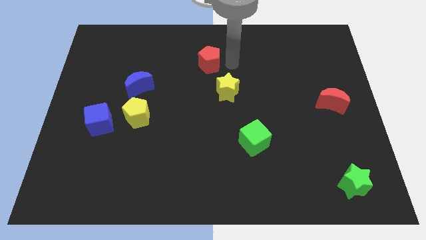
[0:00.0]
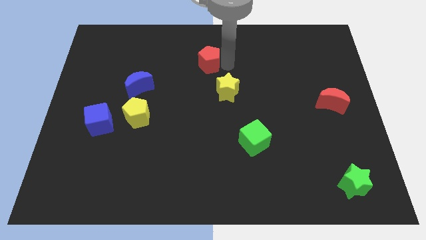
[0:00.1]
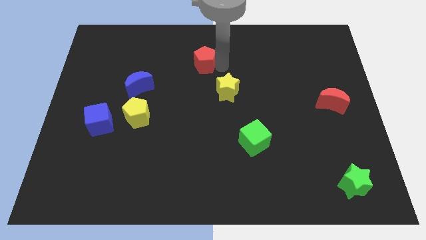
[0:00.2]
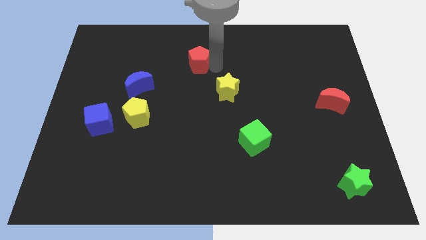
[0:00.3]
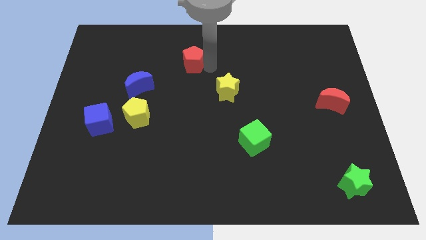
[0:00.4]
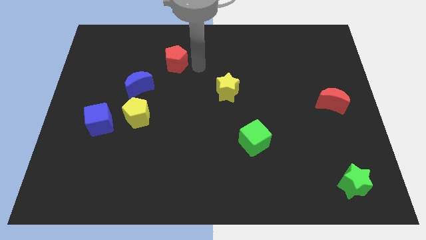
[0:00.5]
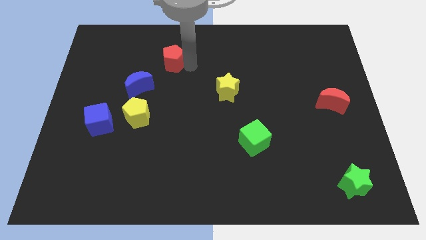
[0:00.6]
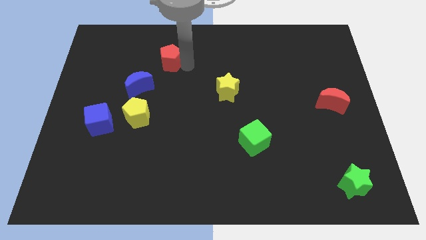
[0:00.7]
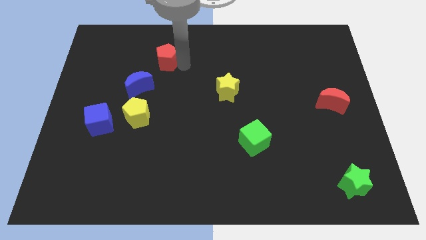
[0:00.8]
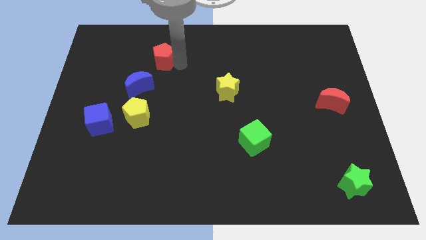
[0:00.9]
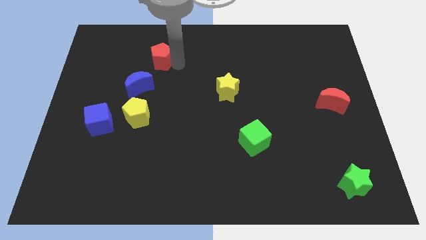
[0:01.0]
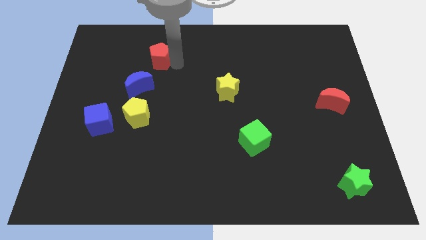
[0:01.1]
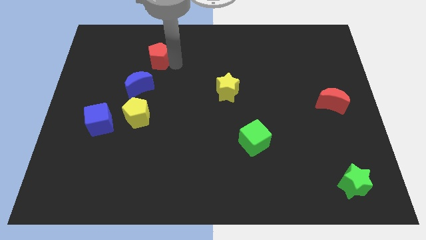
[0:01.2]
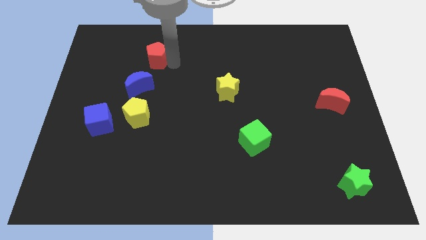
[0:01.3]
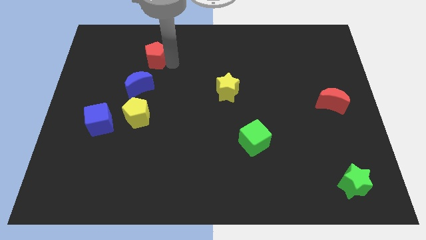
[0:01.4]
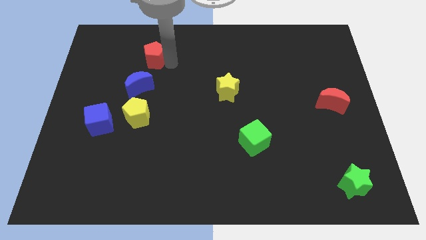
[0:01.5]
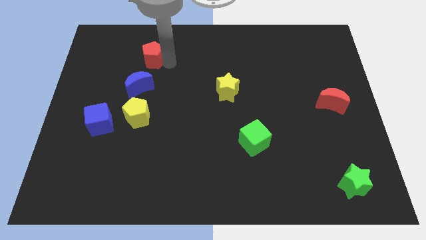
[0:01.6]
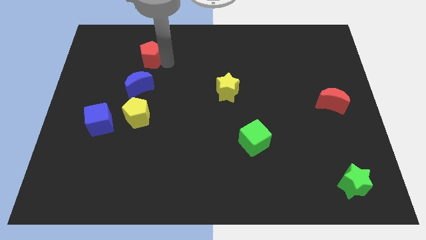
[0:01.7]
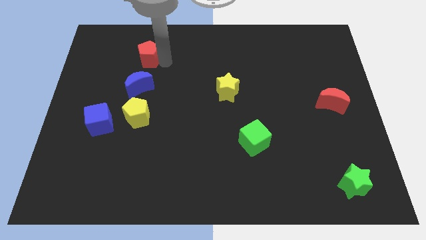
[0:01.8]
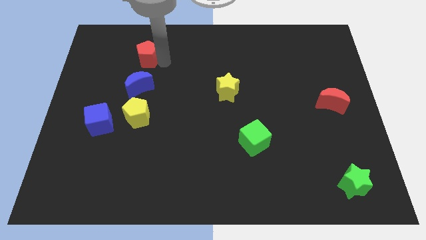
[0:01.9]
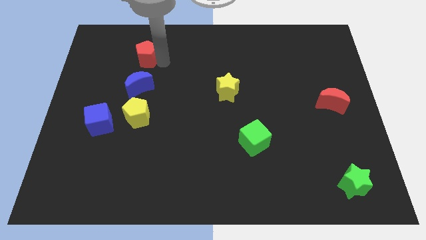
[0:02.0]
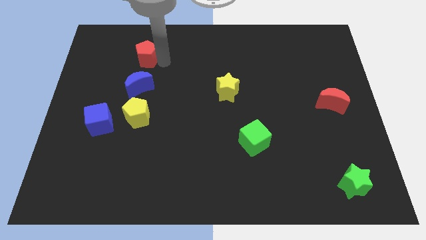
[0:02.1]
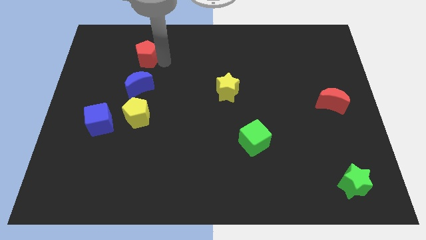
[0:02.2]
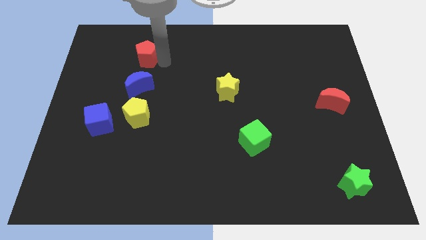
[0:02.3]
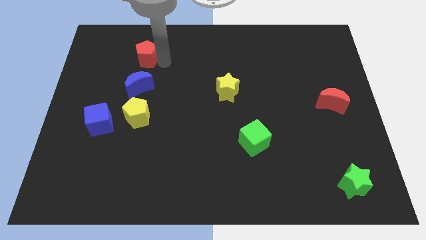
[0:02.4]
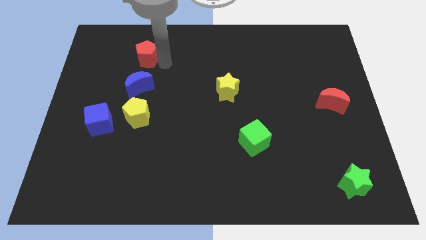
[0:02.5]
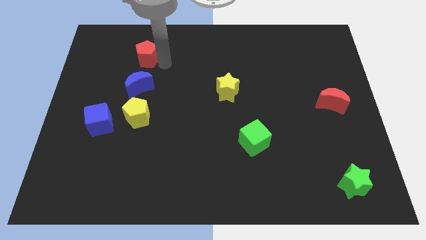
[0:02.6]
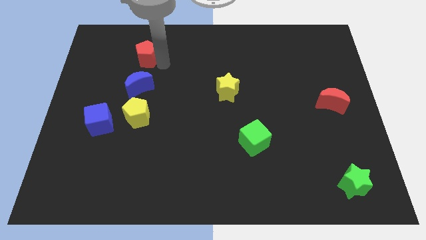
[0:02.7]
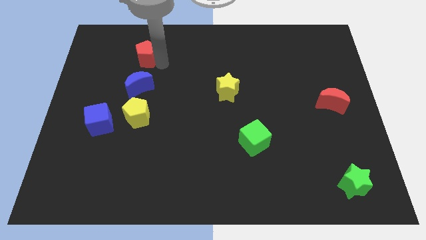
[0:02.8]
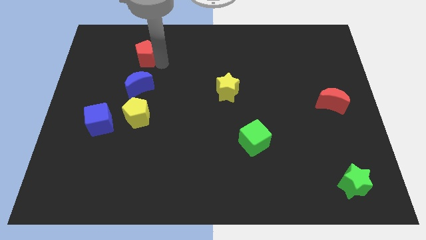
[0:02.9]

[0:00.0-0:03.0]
slide the red pentagon to the left

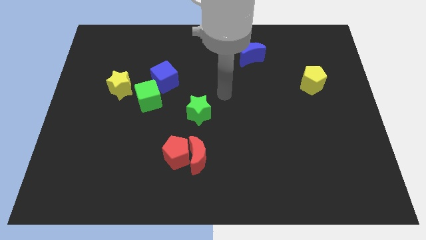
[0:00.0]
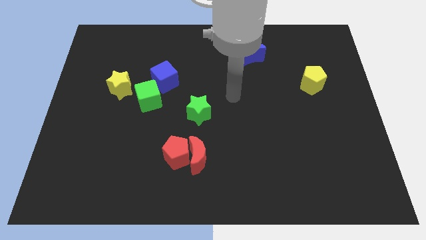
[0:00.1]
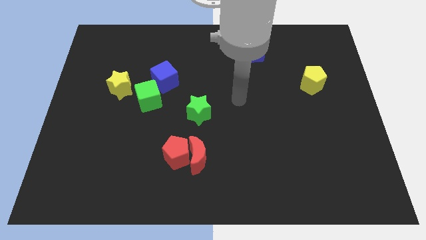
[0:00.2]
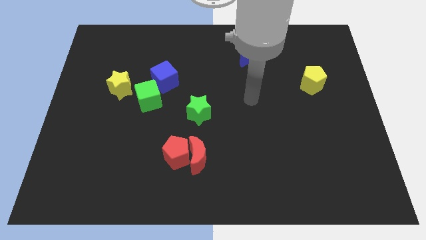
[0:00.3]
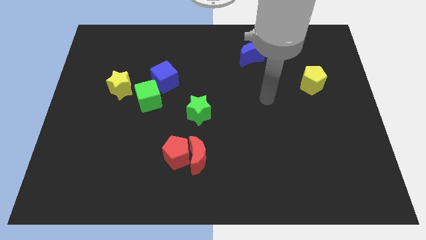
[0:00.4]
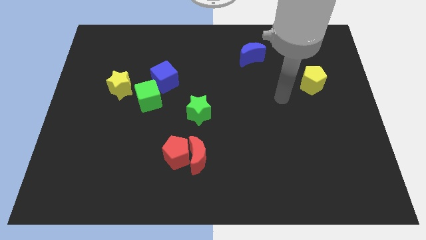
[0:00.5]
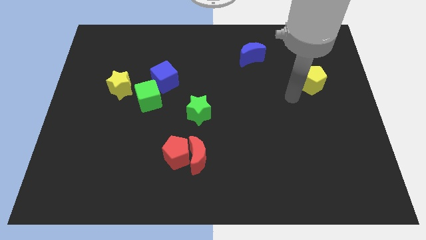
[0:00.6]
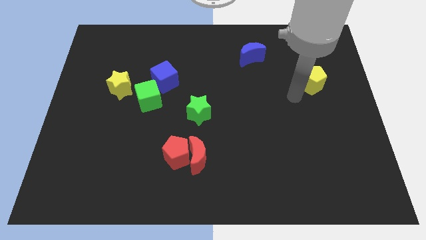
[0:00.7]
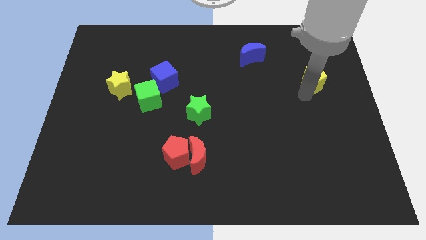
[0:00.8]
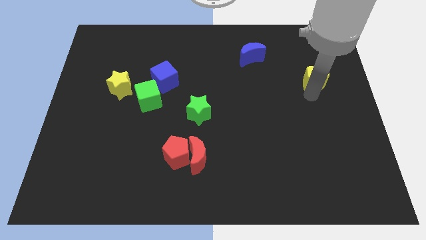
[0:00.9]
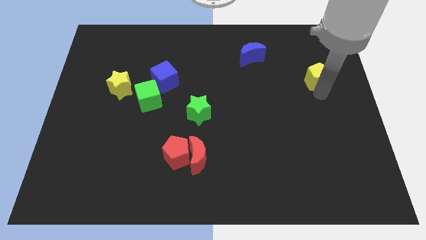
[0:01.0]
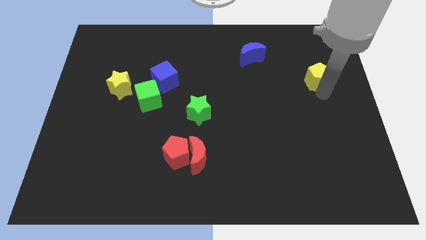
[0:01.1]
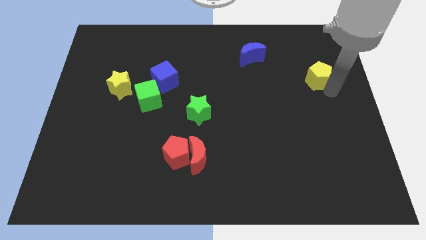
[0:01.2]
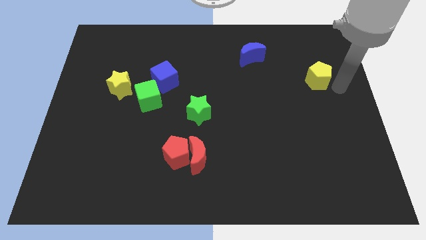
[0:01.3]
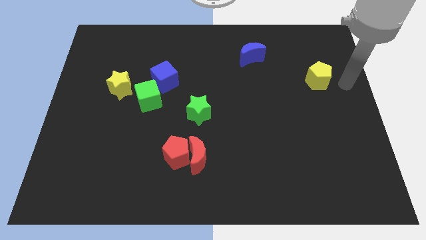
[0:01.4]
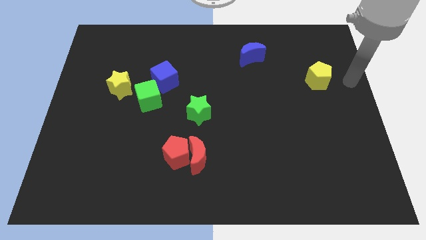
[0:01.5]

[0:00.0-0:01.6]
move the arm towards the yellow pentagon

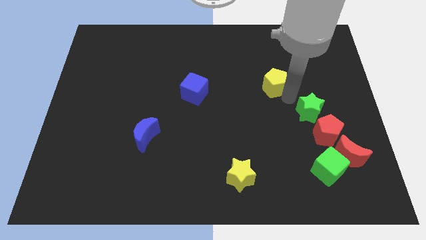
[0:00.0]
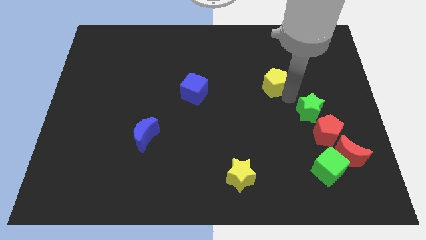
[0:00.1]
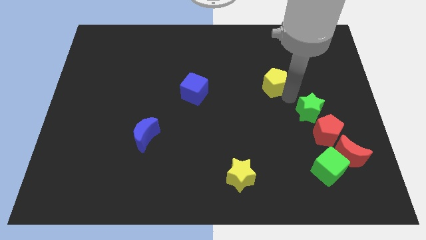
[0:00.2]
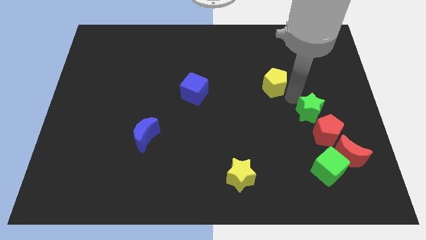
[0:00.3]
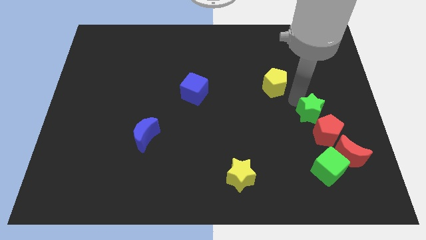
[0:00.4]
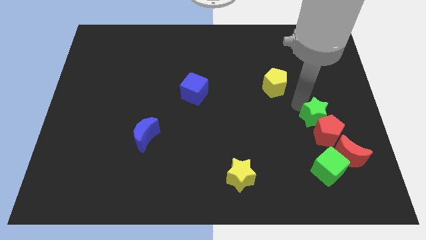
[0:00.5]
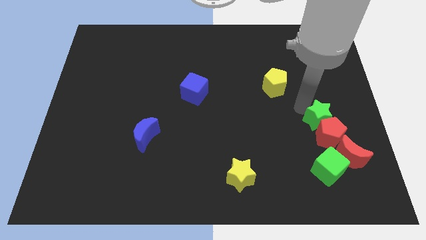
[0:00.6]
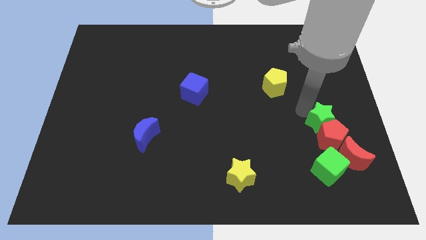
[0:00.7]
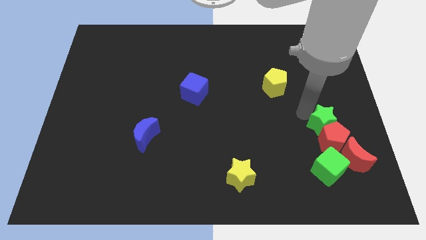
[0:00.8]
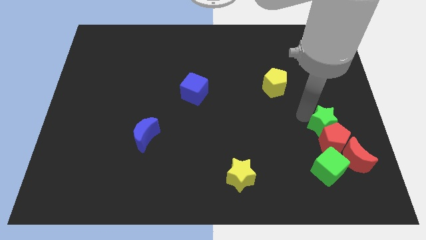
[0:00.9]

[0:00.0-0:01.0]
push green star into the red pentagon

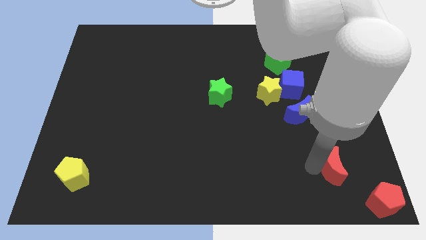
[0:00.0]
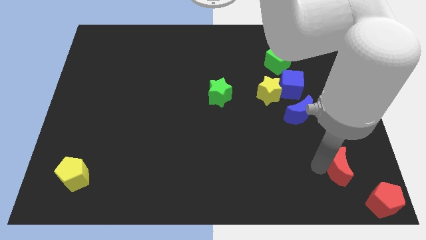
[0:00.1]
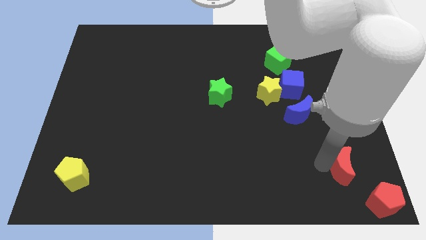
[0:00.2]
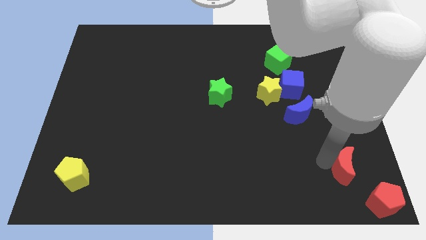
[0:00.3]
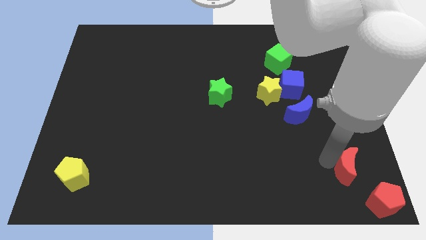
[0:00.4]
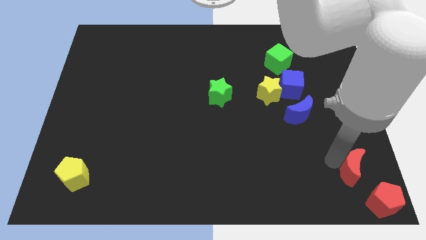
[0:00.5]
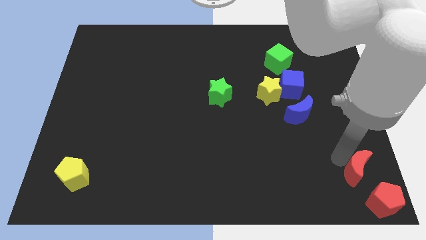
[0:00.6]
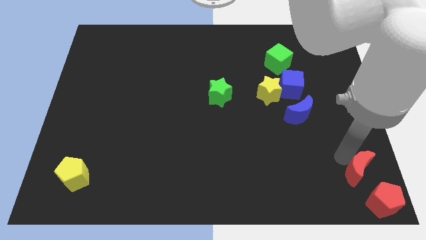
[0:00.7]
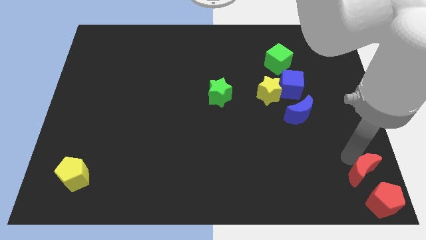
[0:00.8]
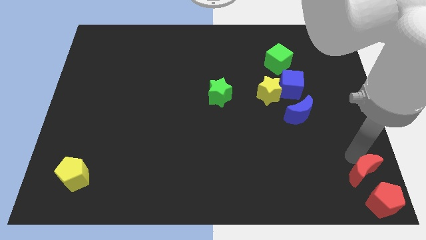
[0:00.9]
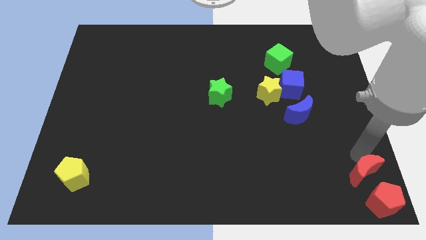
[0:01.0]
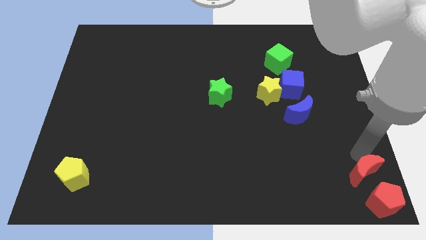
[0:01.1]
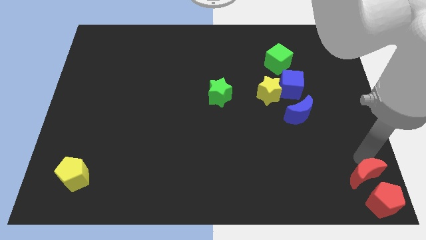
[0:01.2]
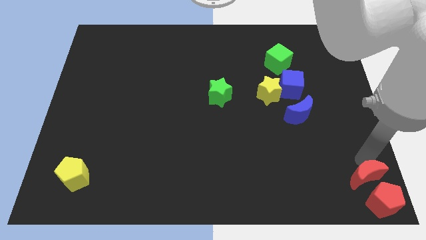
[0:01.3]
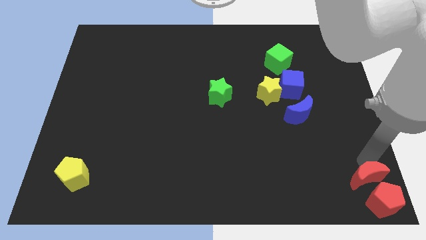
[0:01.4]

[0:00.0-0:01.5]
move the red crescent to the top of red pentagon

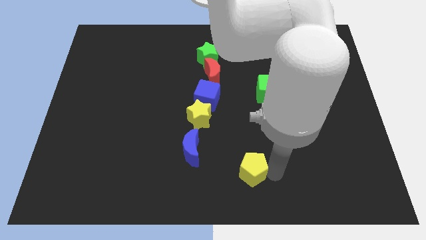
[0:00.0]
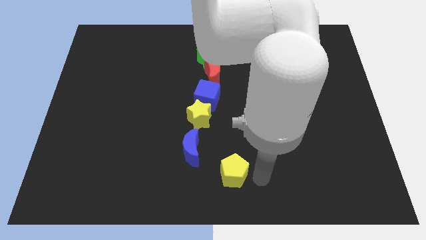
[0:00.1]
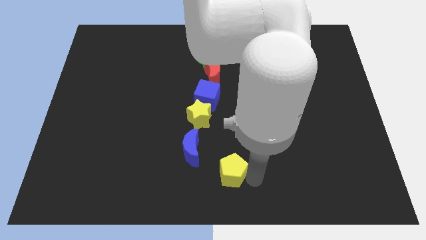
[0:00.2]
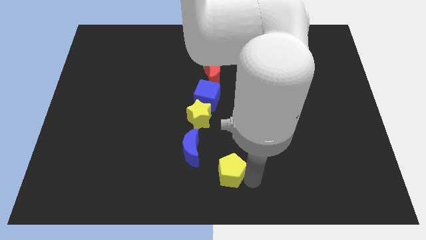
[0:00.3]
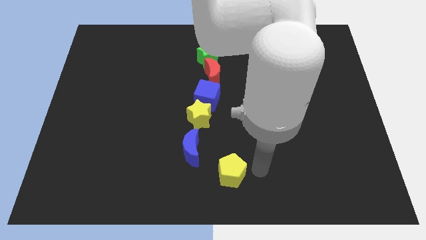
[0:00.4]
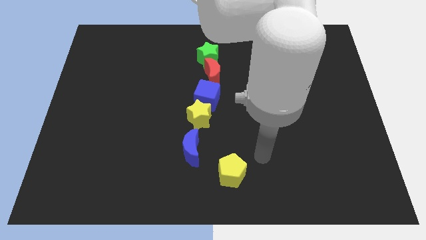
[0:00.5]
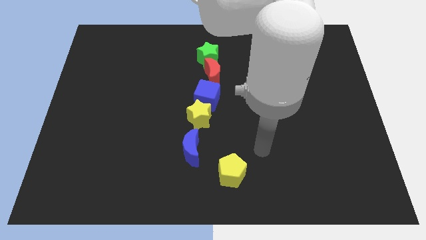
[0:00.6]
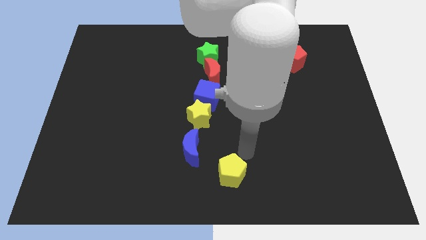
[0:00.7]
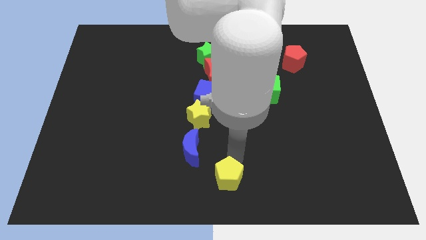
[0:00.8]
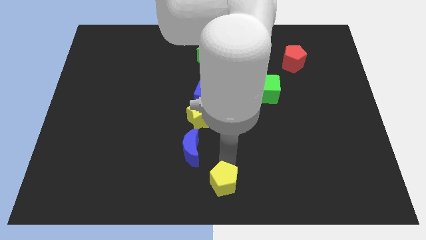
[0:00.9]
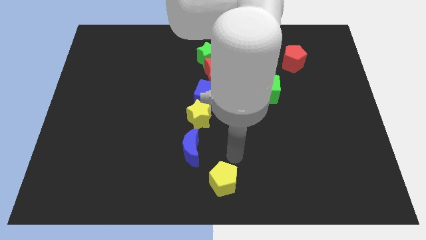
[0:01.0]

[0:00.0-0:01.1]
move the yellow pentagon towards the bottom center

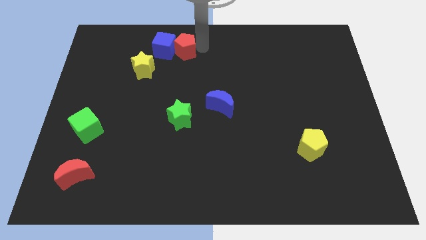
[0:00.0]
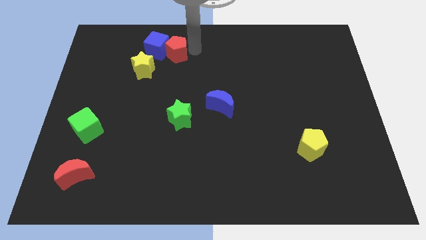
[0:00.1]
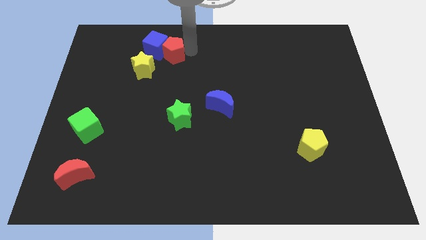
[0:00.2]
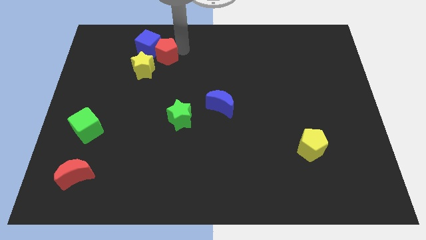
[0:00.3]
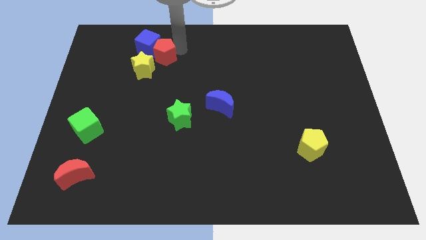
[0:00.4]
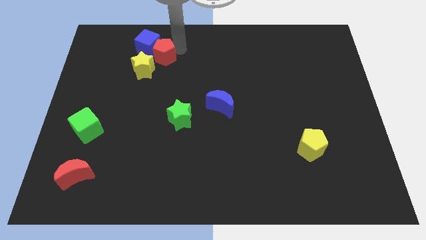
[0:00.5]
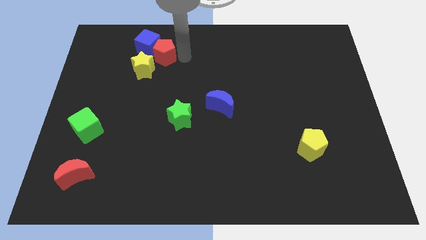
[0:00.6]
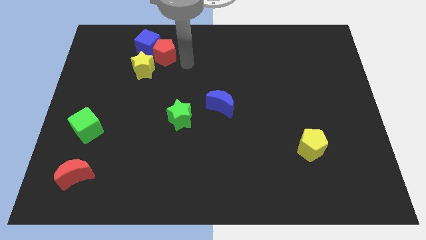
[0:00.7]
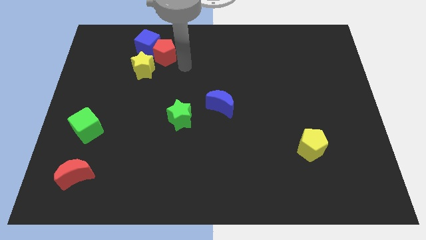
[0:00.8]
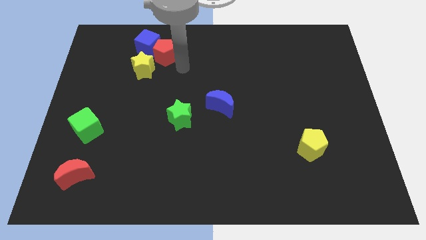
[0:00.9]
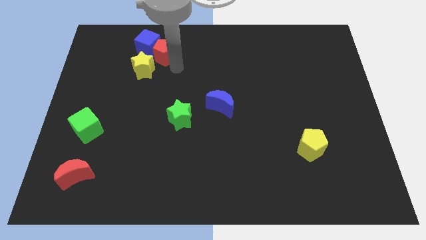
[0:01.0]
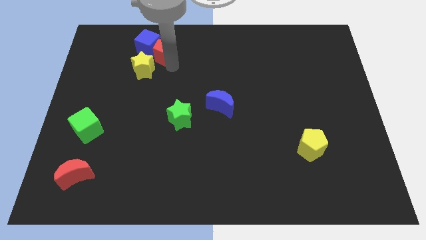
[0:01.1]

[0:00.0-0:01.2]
move the blue cube and the red pentagon above the yellow star
